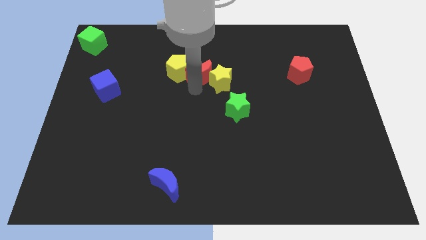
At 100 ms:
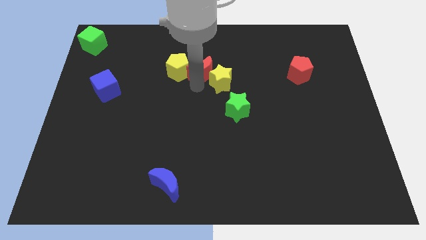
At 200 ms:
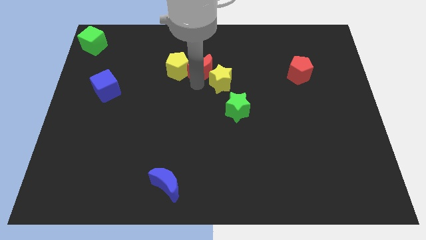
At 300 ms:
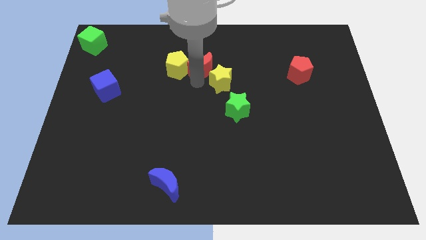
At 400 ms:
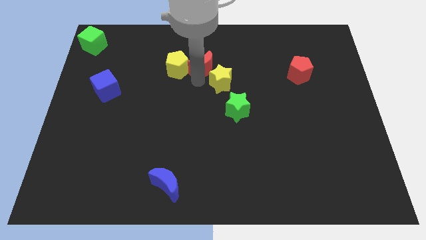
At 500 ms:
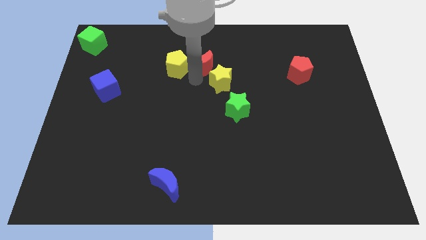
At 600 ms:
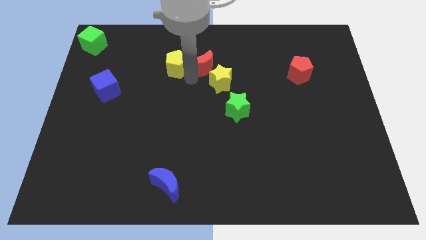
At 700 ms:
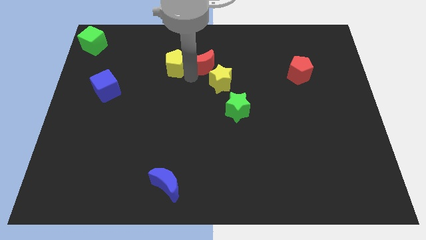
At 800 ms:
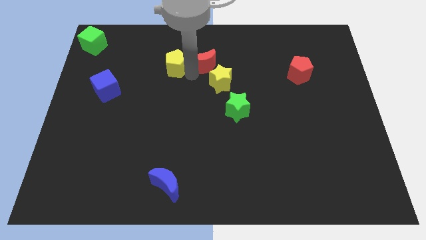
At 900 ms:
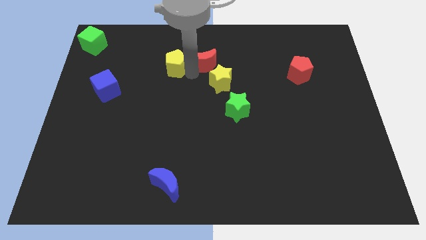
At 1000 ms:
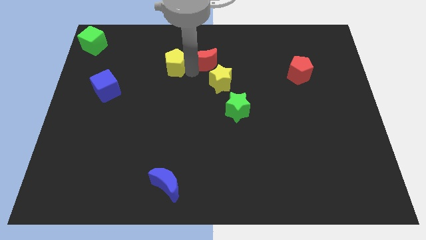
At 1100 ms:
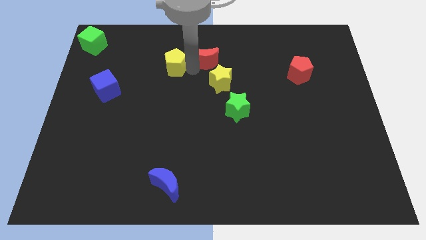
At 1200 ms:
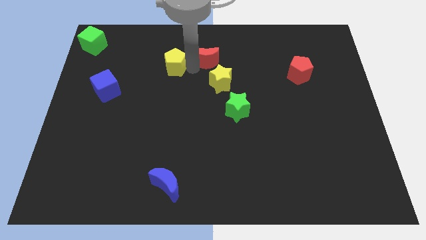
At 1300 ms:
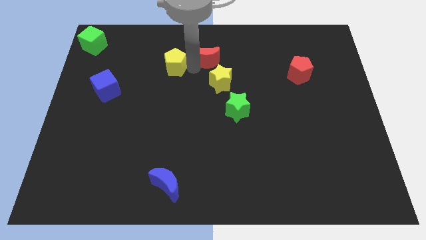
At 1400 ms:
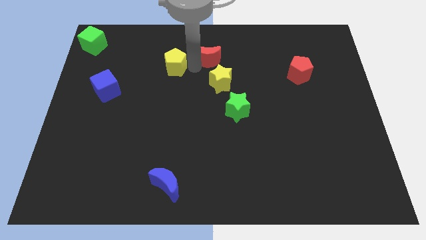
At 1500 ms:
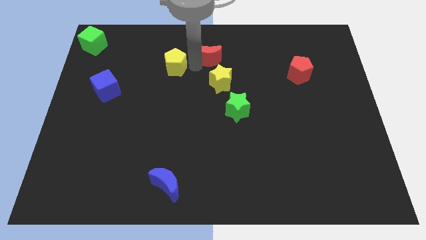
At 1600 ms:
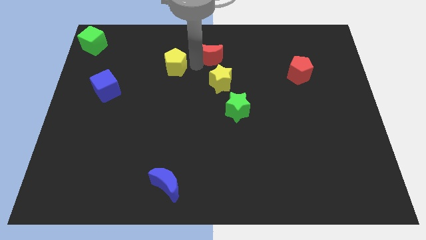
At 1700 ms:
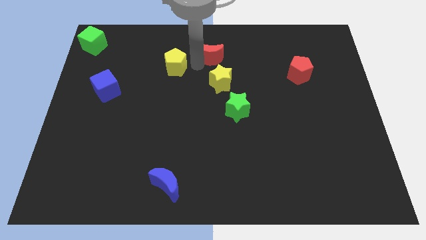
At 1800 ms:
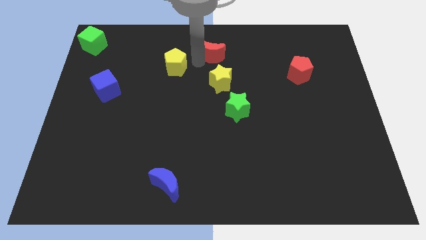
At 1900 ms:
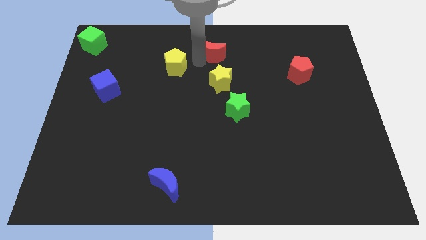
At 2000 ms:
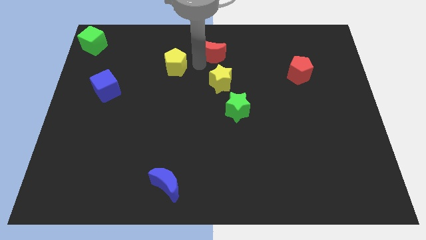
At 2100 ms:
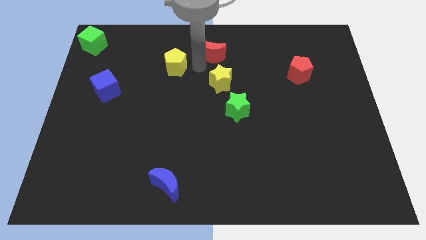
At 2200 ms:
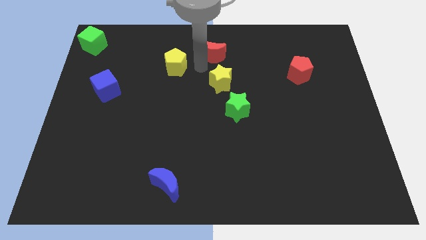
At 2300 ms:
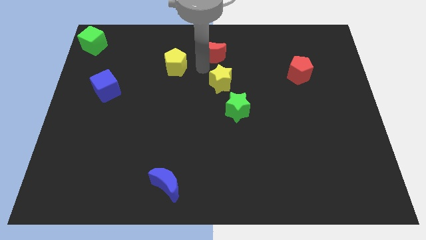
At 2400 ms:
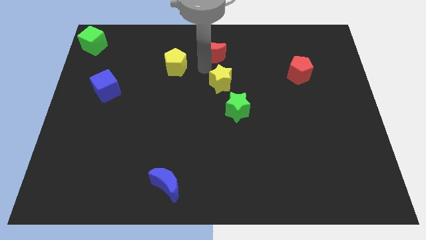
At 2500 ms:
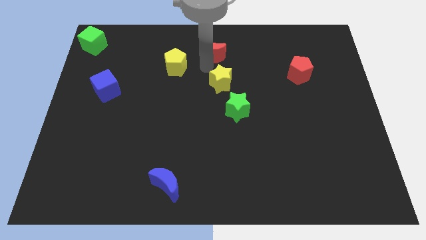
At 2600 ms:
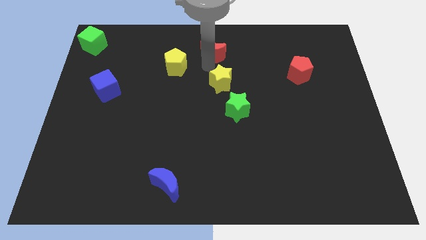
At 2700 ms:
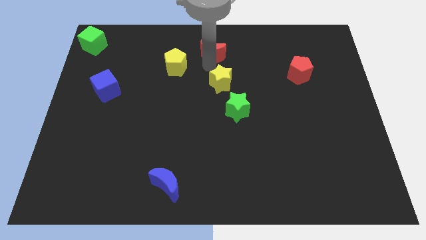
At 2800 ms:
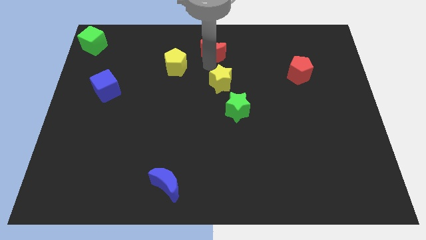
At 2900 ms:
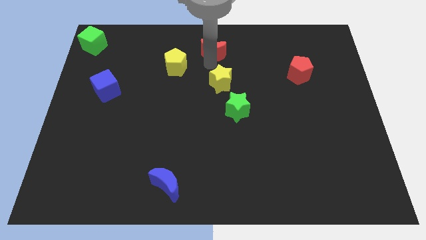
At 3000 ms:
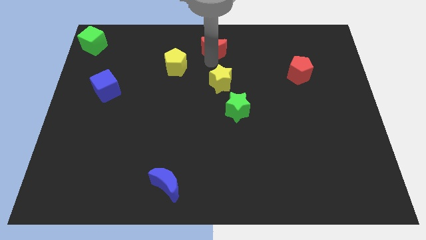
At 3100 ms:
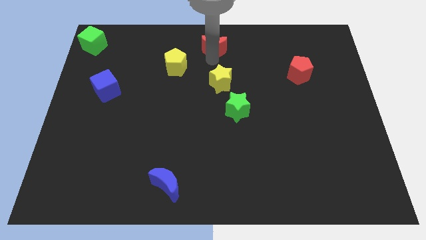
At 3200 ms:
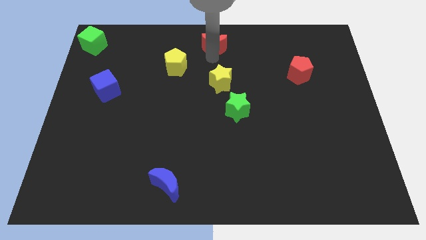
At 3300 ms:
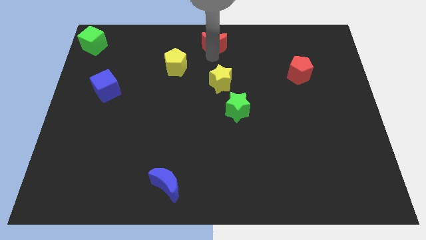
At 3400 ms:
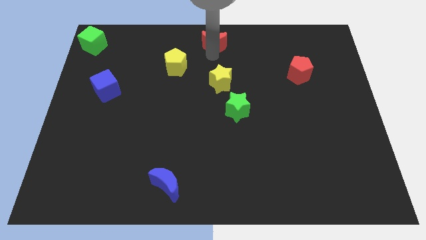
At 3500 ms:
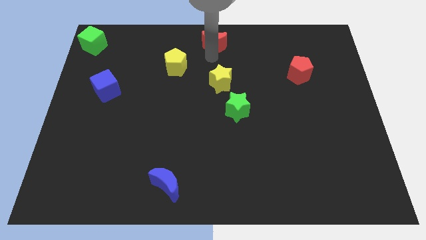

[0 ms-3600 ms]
put the red crescent at the top center of the board

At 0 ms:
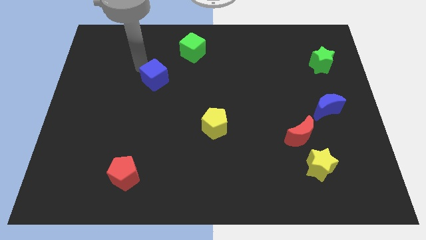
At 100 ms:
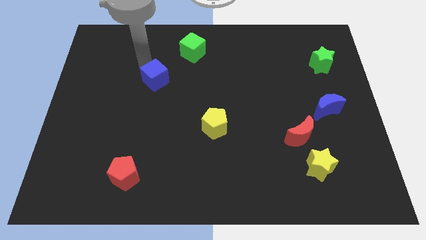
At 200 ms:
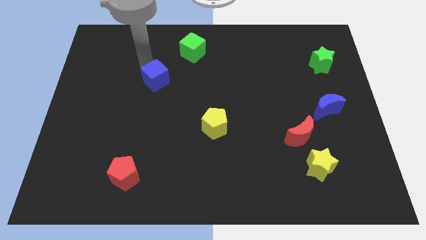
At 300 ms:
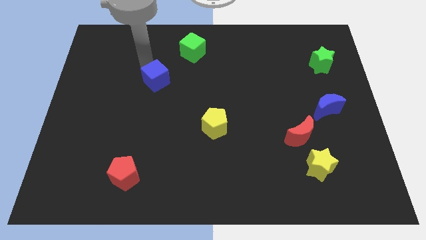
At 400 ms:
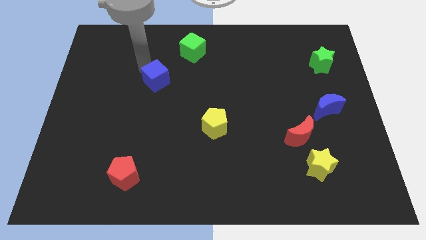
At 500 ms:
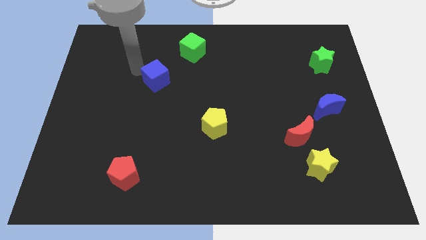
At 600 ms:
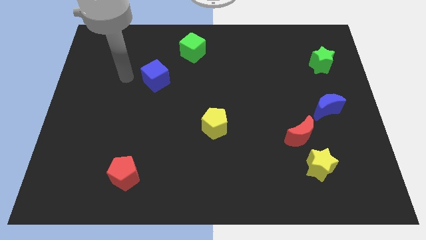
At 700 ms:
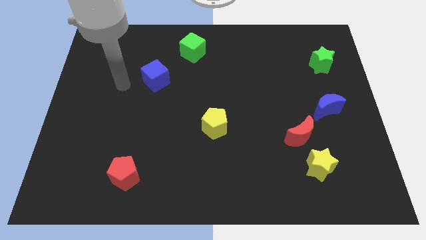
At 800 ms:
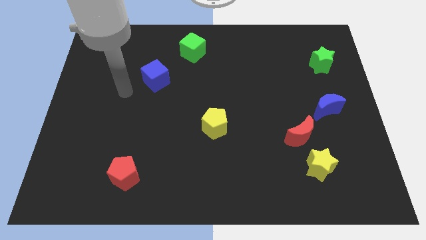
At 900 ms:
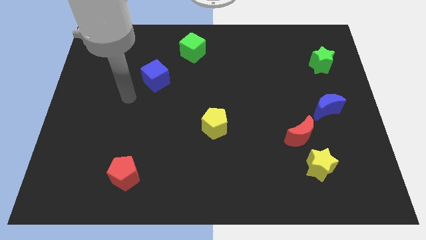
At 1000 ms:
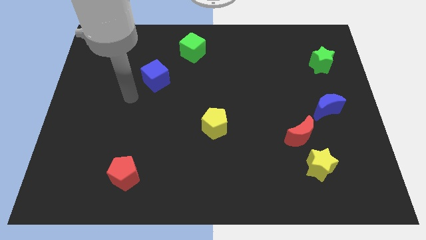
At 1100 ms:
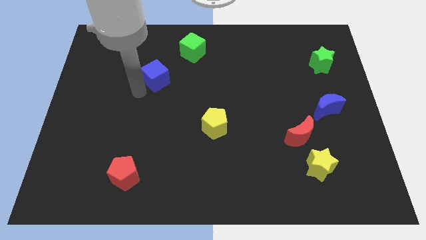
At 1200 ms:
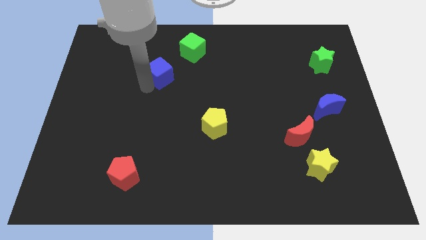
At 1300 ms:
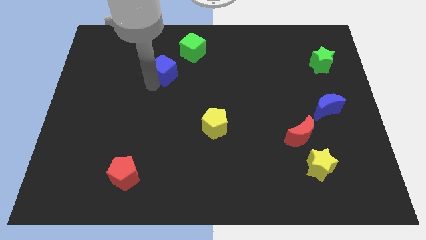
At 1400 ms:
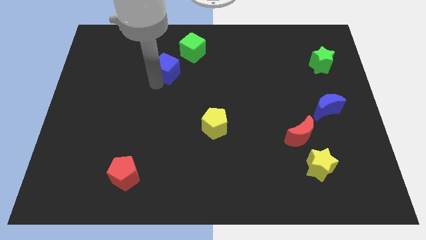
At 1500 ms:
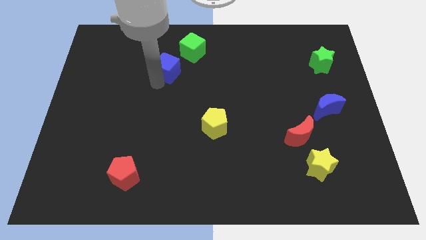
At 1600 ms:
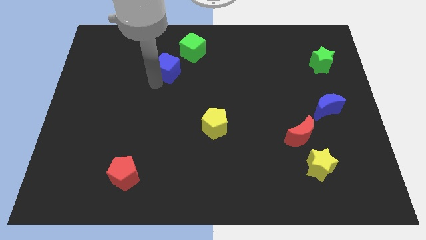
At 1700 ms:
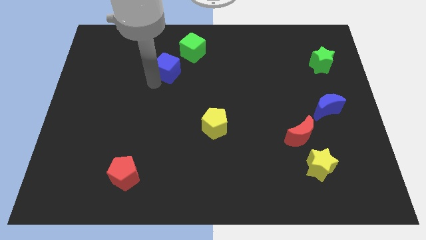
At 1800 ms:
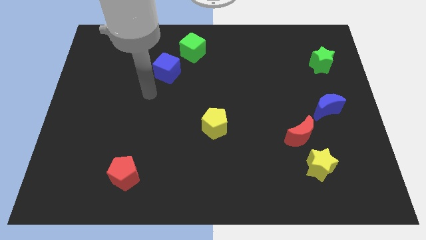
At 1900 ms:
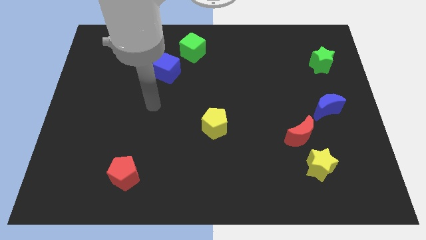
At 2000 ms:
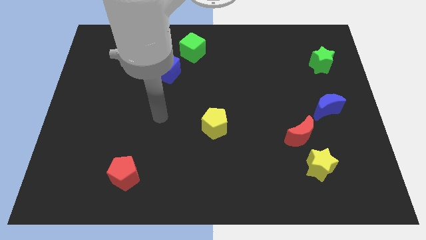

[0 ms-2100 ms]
drag the blue cube close to the green cube

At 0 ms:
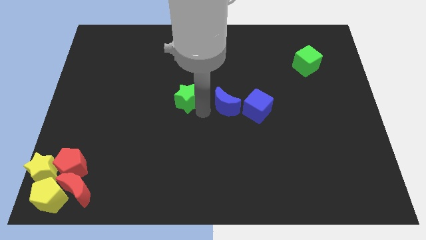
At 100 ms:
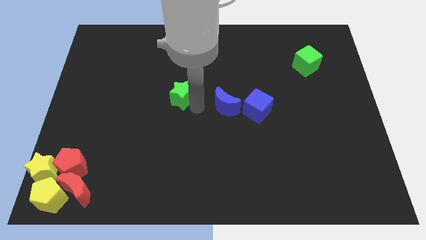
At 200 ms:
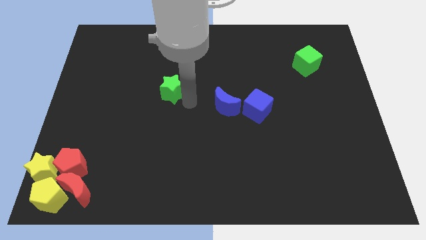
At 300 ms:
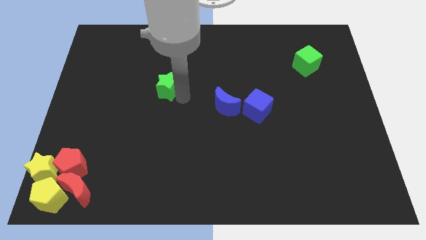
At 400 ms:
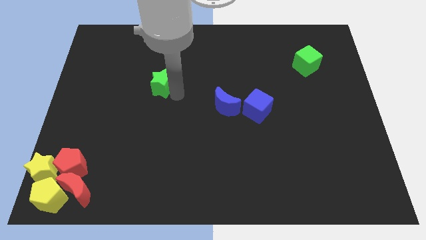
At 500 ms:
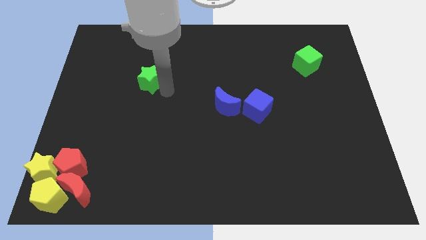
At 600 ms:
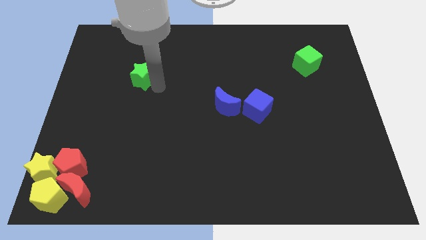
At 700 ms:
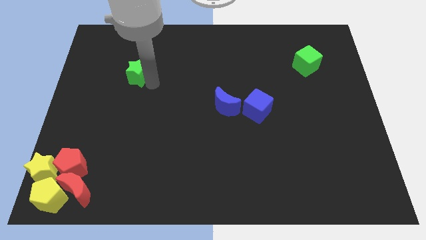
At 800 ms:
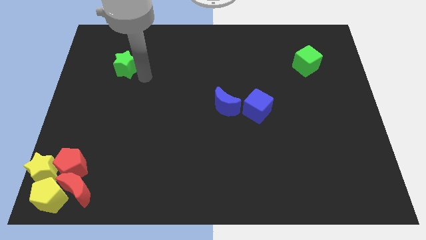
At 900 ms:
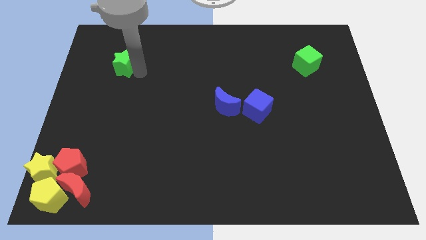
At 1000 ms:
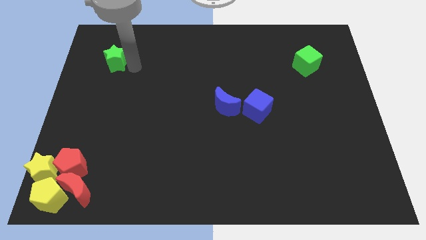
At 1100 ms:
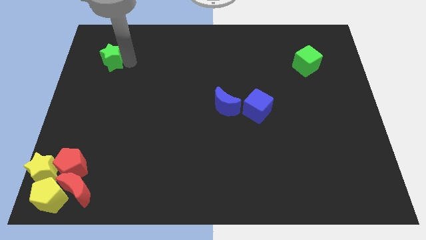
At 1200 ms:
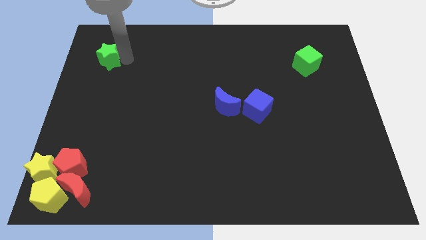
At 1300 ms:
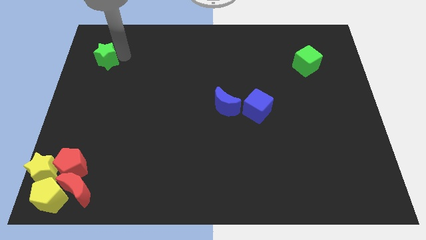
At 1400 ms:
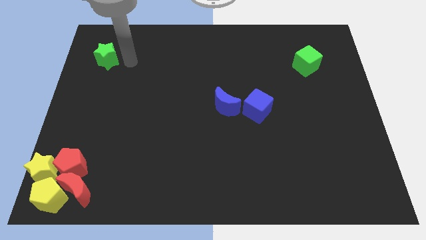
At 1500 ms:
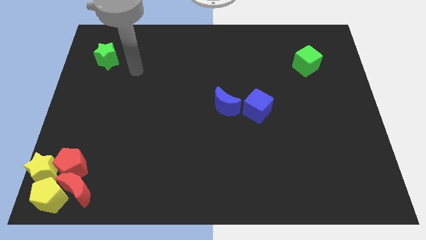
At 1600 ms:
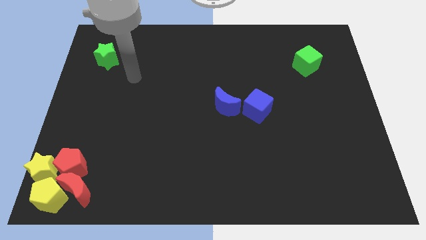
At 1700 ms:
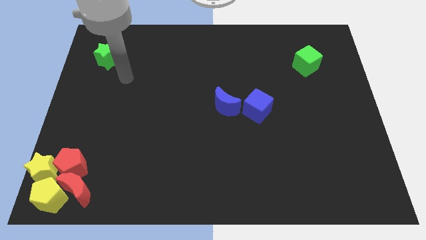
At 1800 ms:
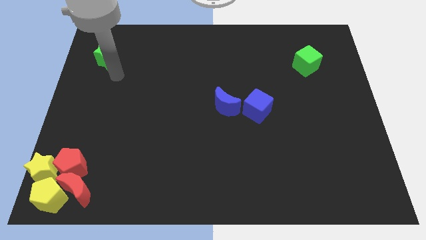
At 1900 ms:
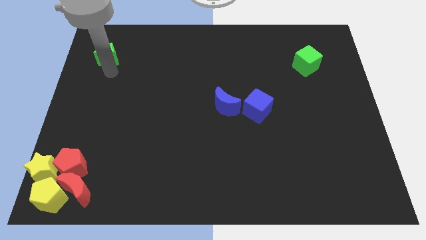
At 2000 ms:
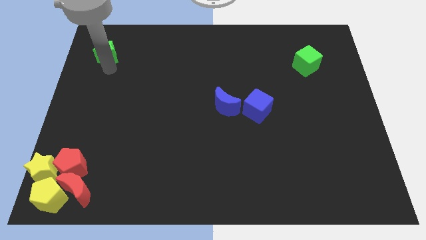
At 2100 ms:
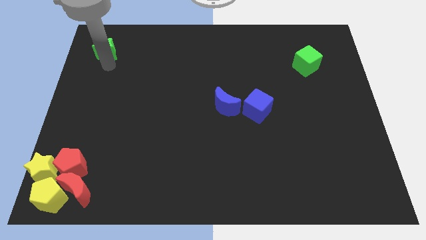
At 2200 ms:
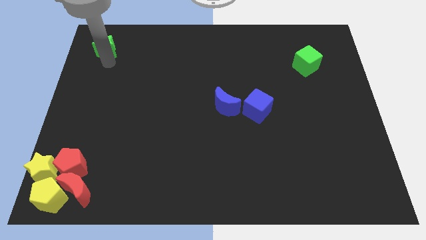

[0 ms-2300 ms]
push the green star towards the top left corner

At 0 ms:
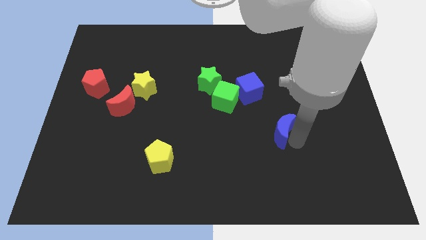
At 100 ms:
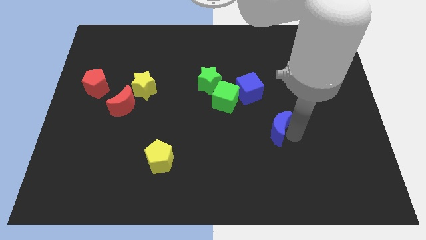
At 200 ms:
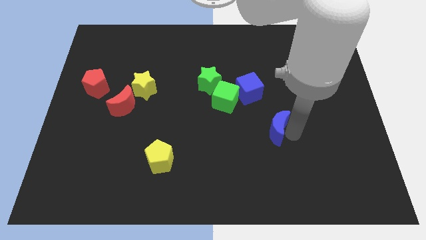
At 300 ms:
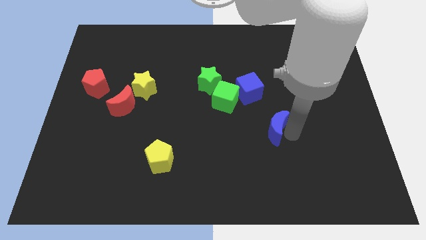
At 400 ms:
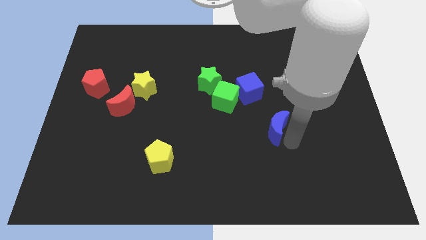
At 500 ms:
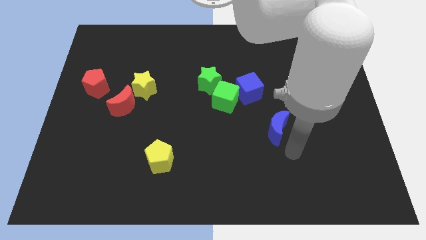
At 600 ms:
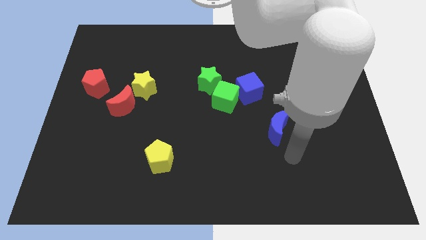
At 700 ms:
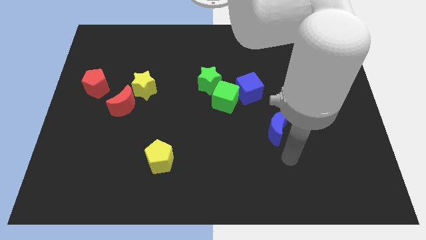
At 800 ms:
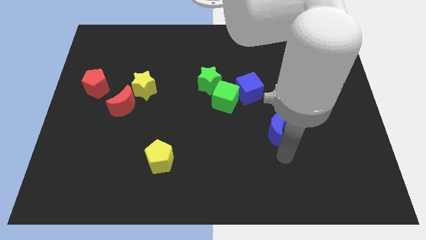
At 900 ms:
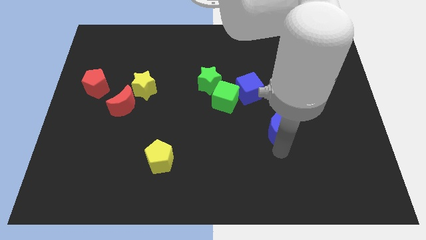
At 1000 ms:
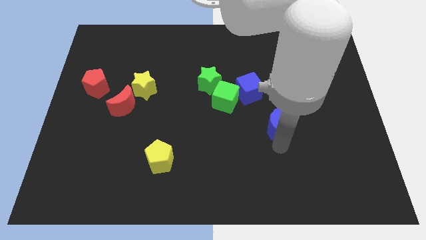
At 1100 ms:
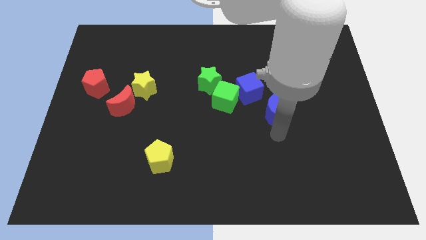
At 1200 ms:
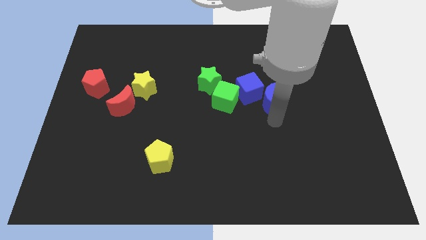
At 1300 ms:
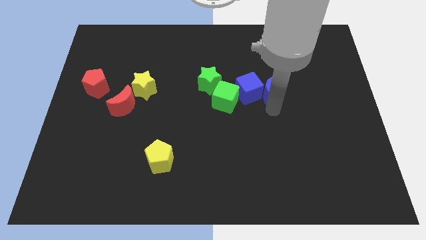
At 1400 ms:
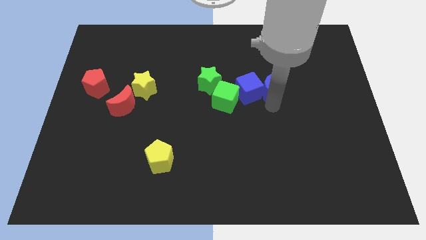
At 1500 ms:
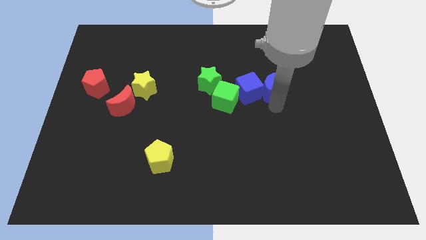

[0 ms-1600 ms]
move the blue moon to the top
